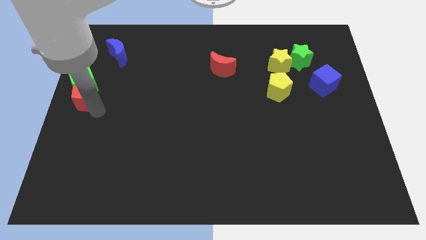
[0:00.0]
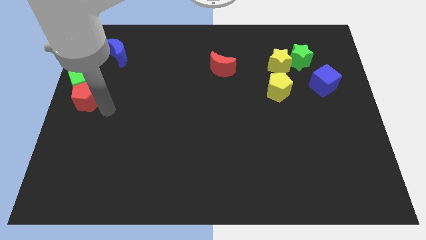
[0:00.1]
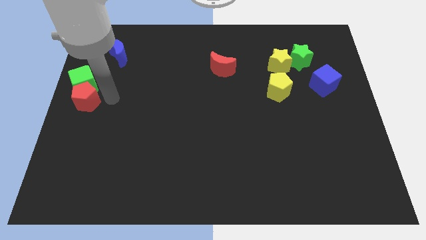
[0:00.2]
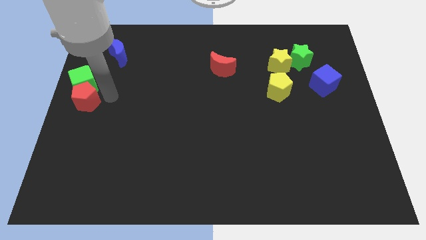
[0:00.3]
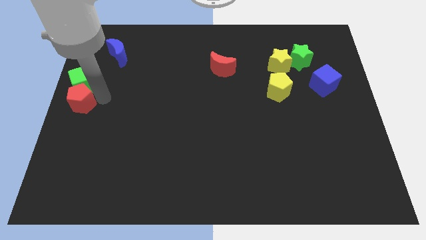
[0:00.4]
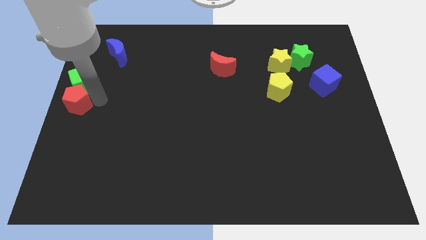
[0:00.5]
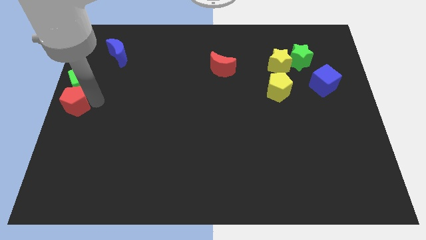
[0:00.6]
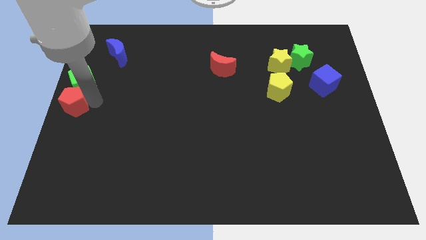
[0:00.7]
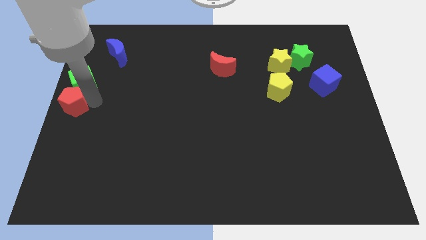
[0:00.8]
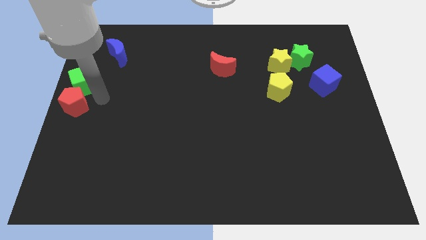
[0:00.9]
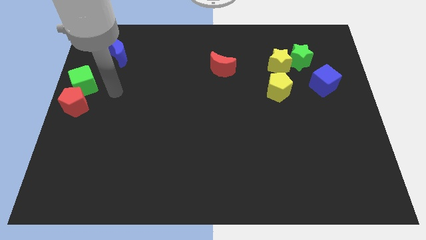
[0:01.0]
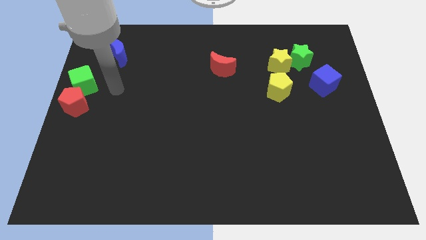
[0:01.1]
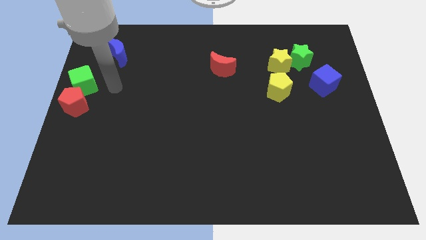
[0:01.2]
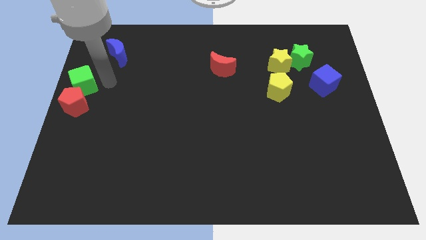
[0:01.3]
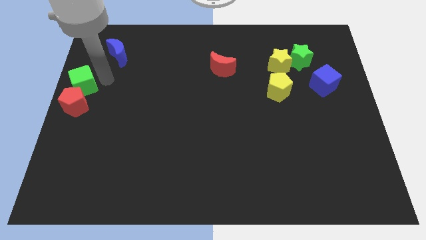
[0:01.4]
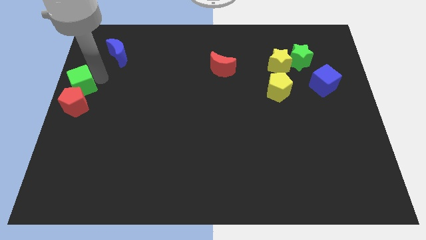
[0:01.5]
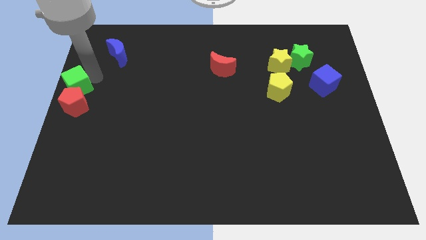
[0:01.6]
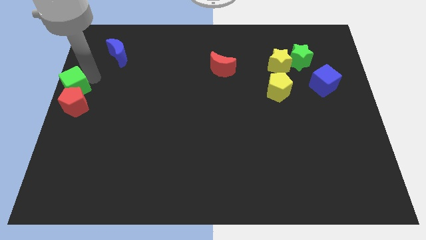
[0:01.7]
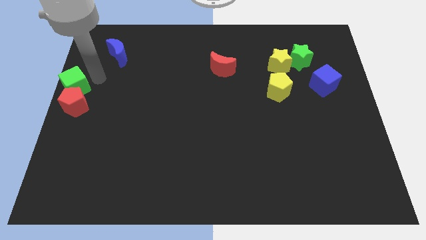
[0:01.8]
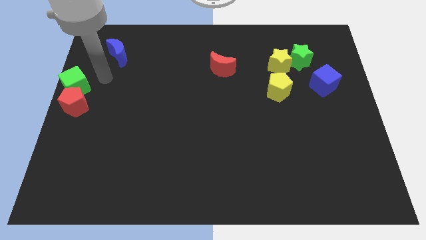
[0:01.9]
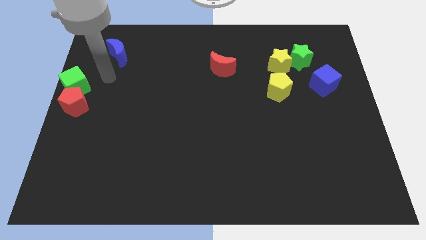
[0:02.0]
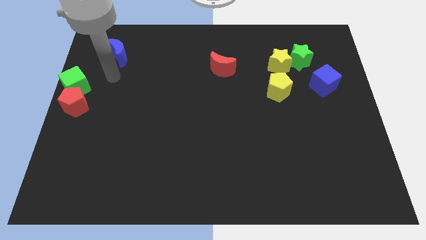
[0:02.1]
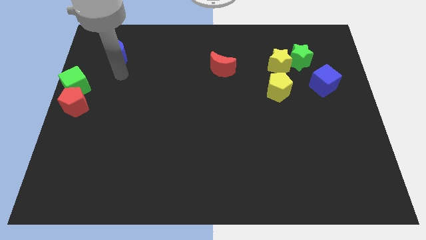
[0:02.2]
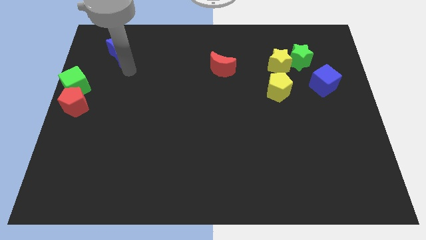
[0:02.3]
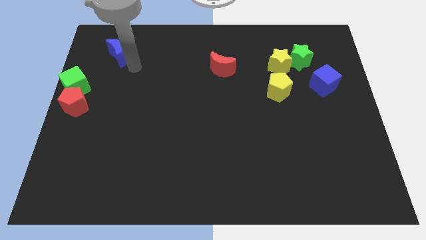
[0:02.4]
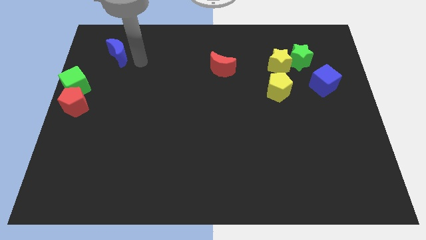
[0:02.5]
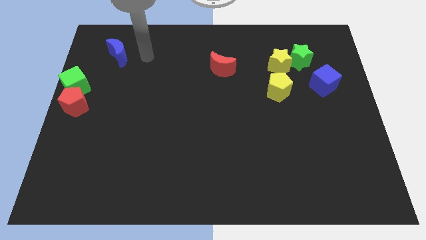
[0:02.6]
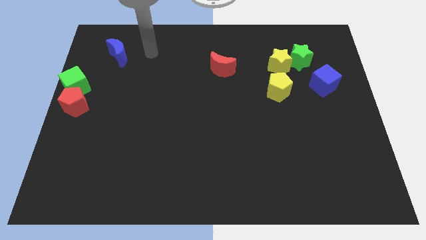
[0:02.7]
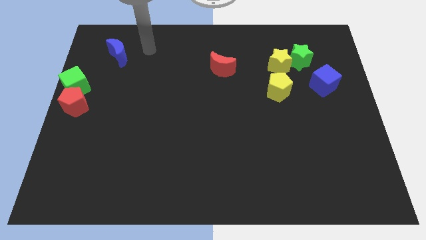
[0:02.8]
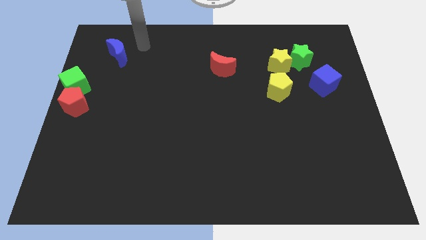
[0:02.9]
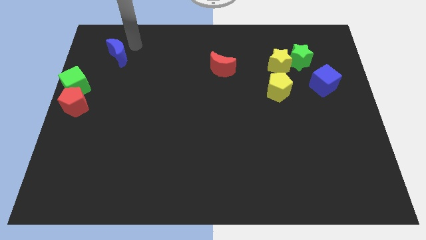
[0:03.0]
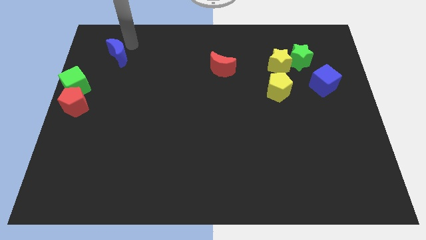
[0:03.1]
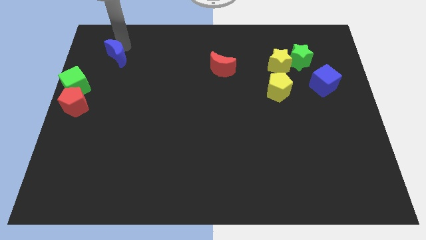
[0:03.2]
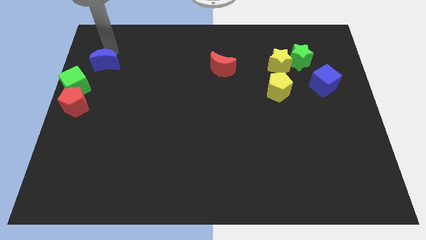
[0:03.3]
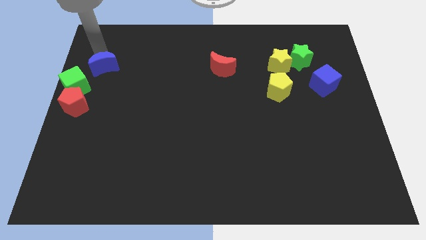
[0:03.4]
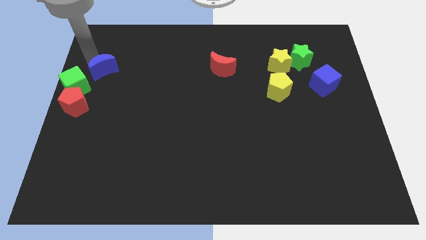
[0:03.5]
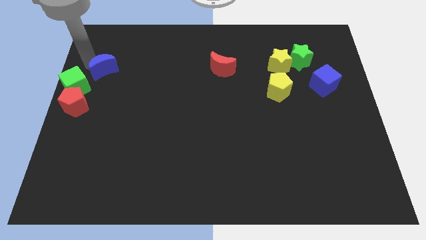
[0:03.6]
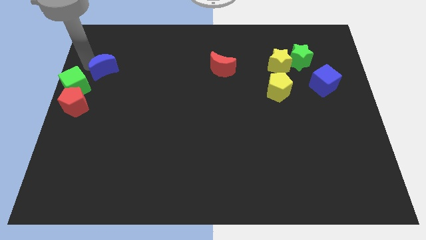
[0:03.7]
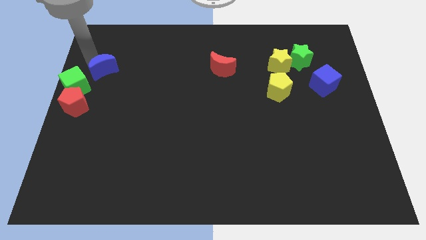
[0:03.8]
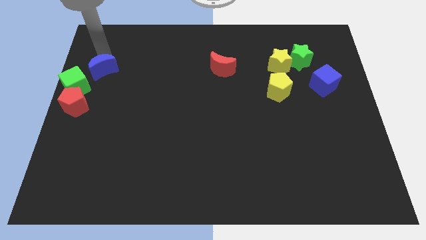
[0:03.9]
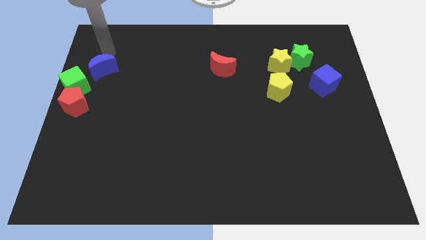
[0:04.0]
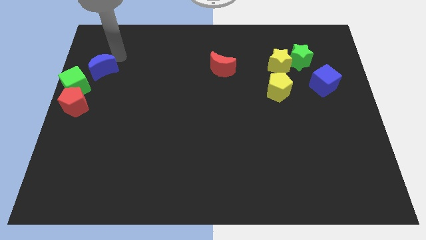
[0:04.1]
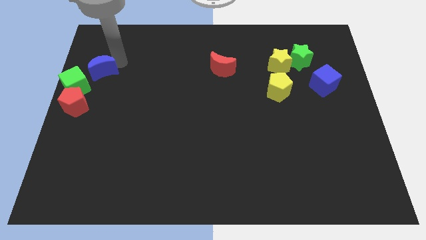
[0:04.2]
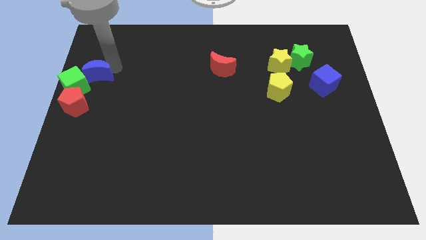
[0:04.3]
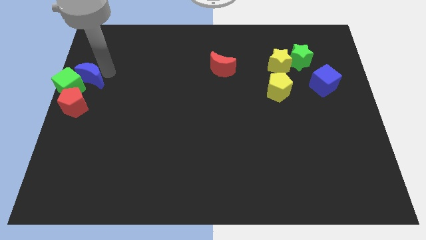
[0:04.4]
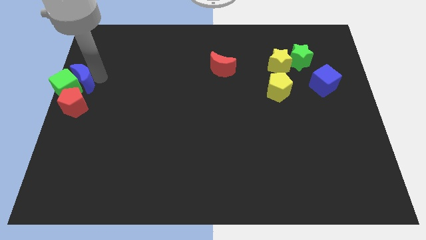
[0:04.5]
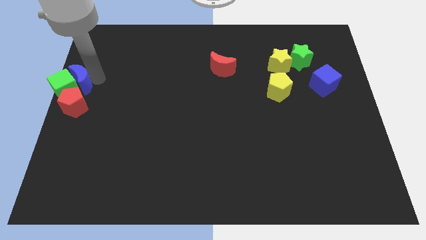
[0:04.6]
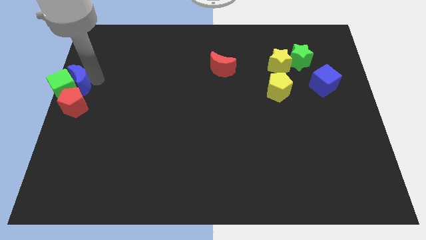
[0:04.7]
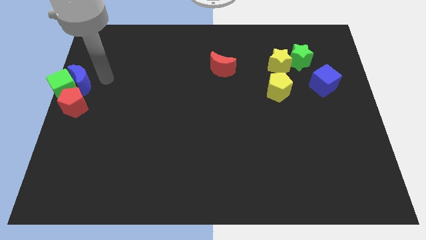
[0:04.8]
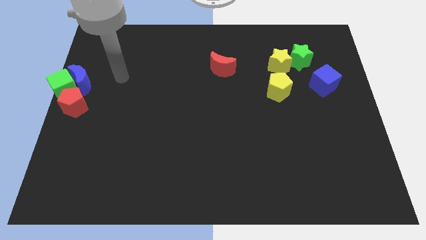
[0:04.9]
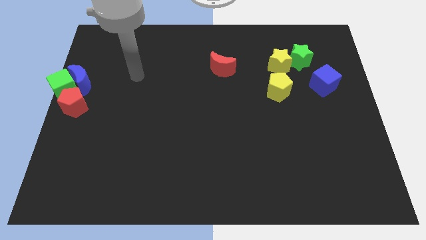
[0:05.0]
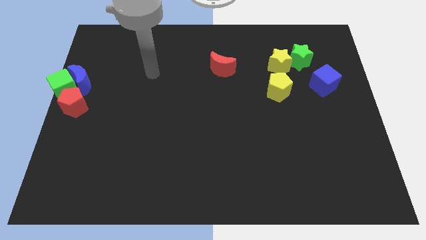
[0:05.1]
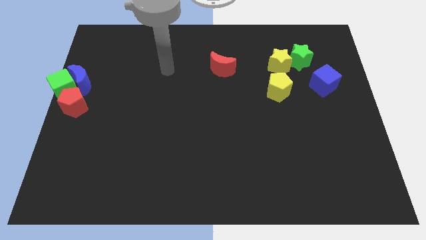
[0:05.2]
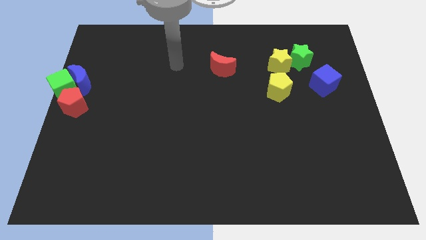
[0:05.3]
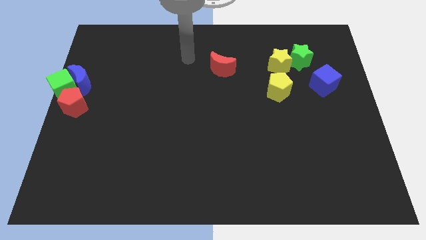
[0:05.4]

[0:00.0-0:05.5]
move the blue moon into the green cube

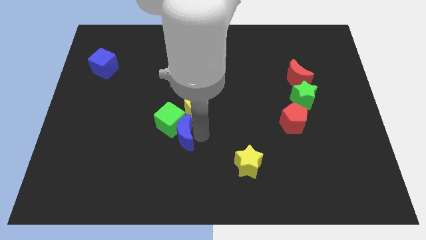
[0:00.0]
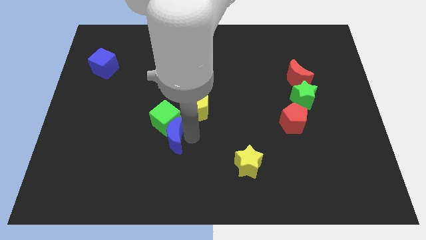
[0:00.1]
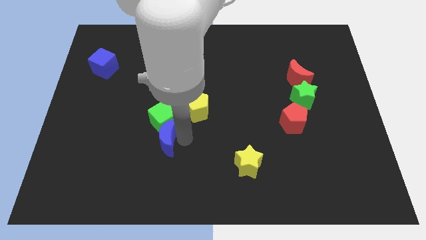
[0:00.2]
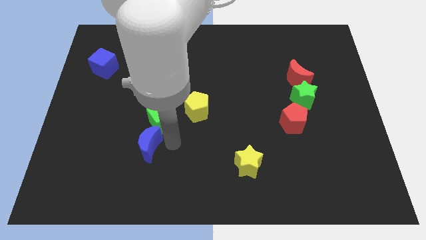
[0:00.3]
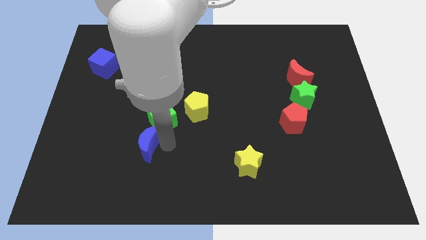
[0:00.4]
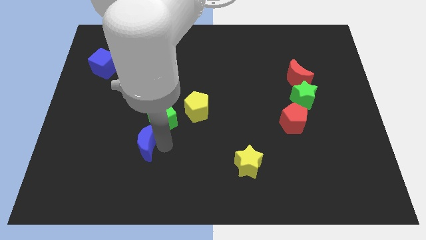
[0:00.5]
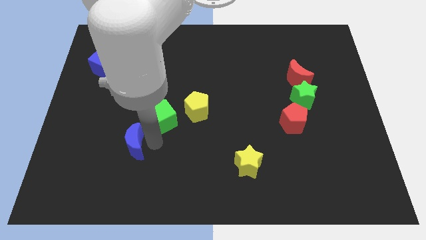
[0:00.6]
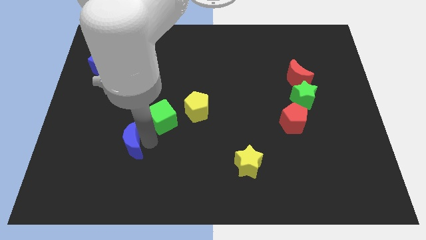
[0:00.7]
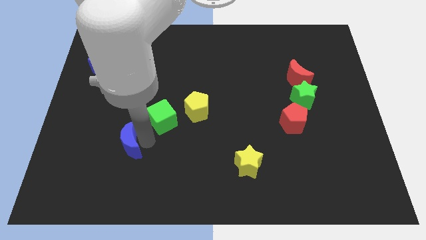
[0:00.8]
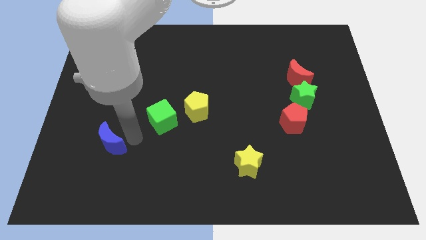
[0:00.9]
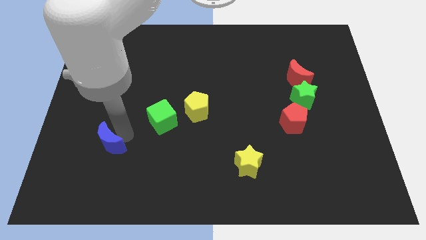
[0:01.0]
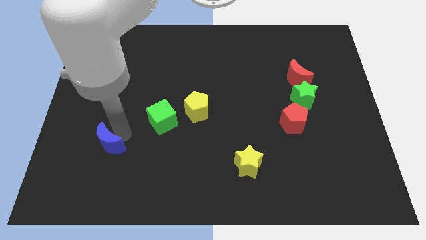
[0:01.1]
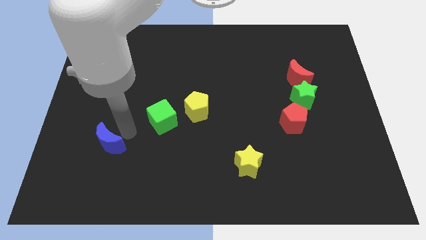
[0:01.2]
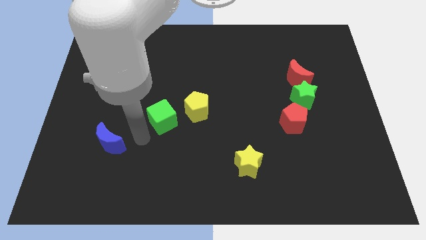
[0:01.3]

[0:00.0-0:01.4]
separate blue moon from the green cube

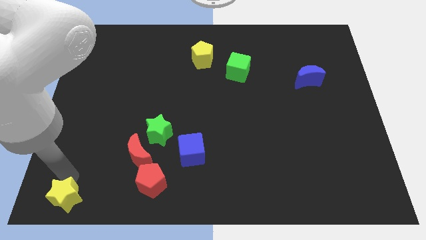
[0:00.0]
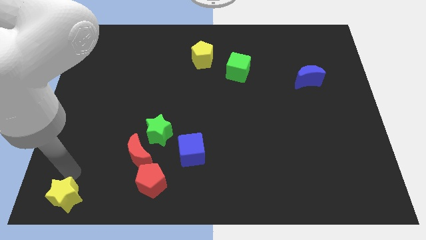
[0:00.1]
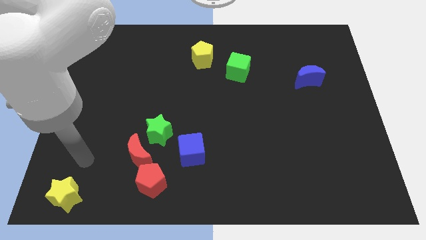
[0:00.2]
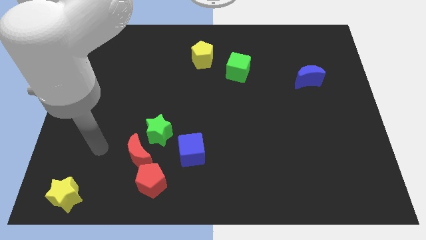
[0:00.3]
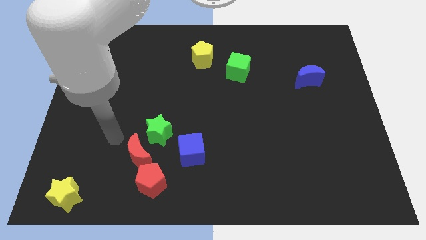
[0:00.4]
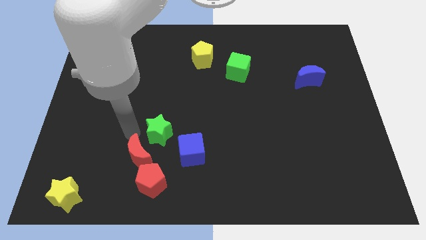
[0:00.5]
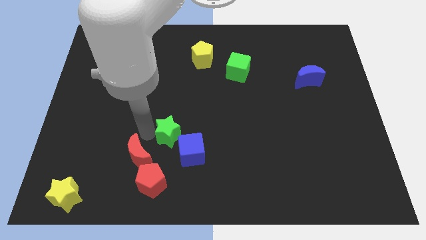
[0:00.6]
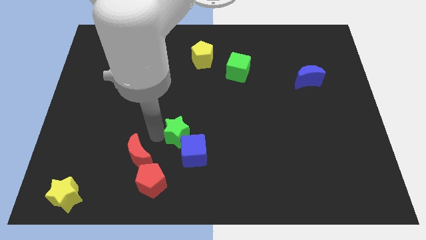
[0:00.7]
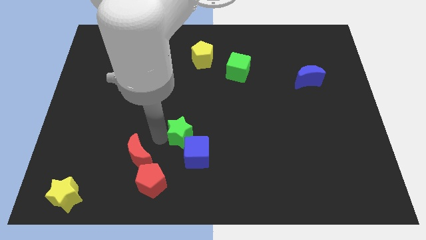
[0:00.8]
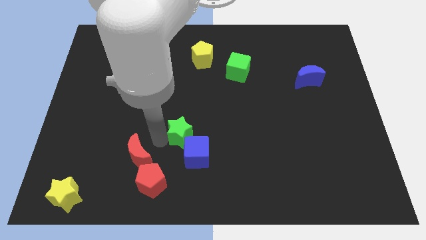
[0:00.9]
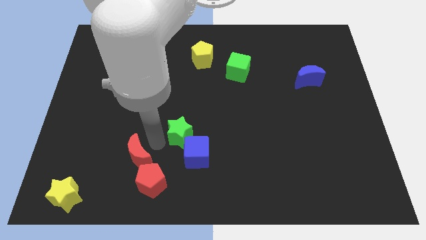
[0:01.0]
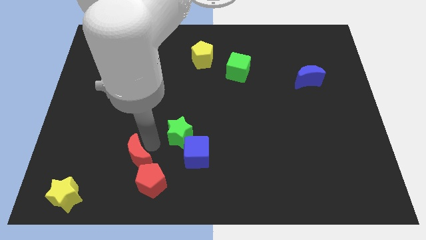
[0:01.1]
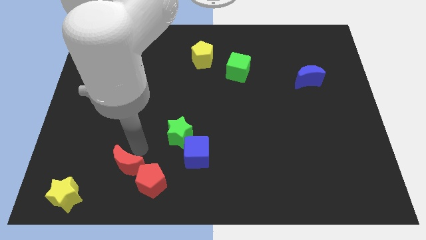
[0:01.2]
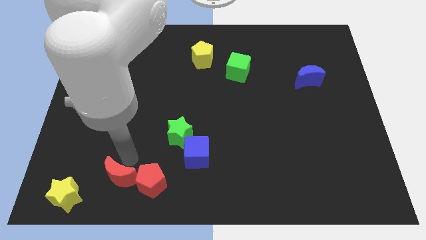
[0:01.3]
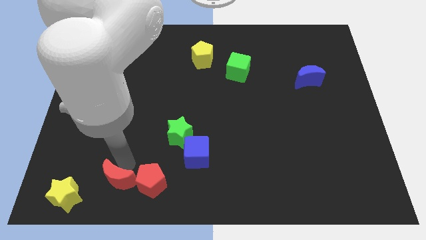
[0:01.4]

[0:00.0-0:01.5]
move the green star into the blue cube

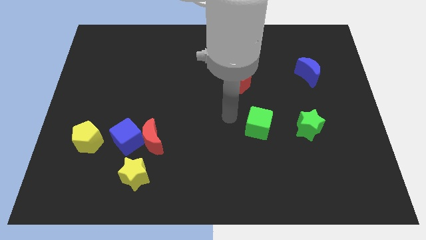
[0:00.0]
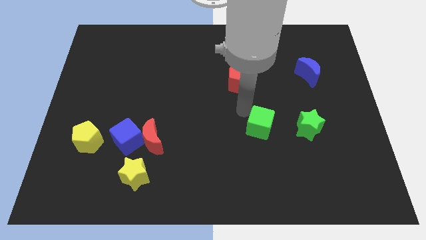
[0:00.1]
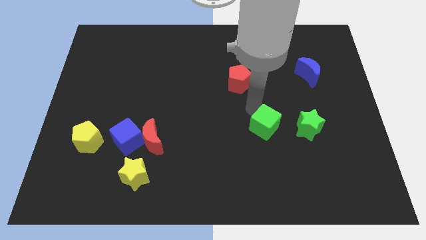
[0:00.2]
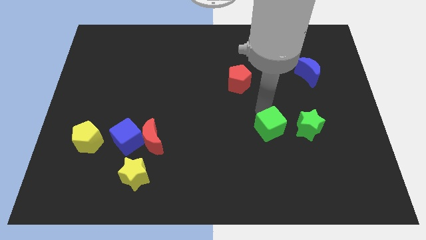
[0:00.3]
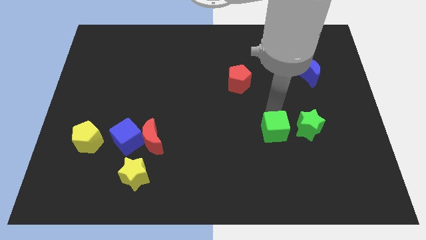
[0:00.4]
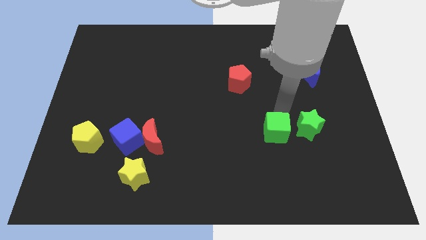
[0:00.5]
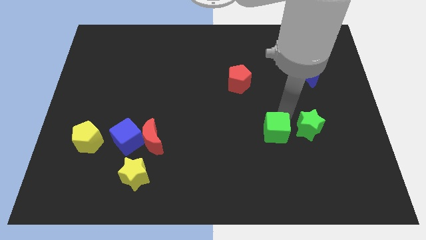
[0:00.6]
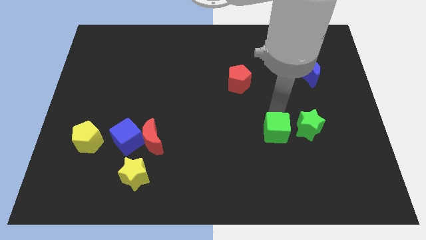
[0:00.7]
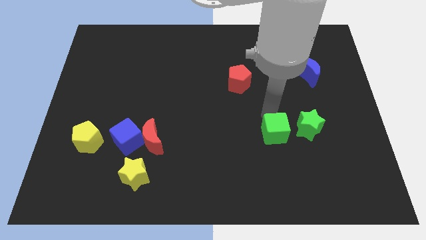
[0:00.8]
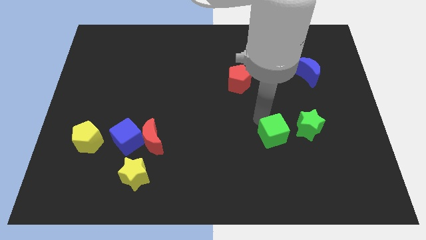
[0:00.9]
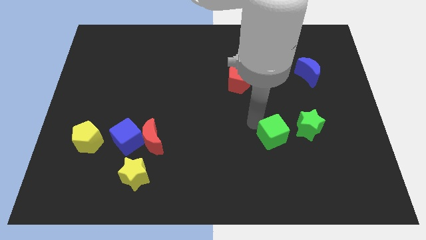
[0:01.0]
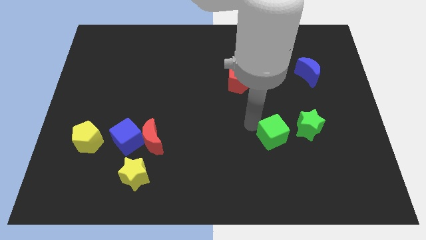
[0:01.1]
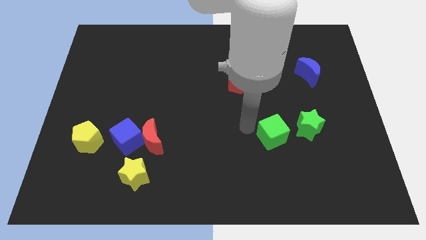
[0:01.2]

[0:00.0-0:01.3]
place the green cube left to the green star
